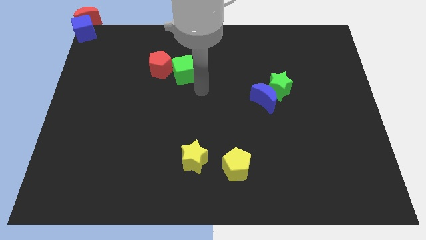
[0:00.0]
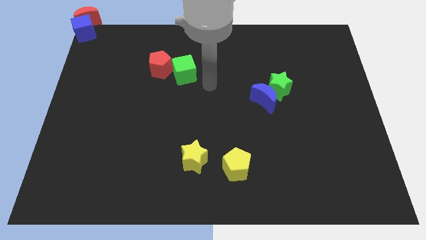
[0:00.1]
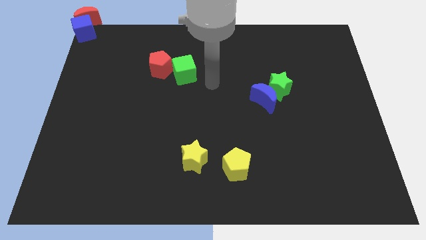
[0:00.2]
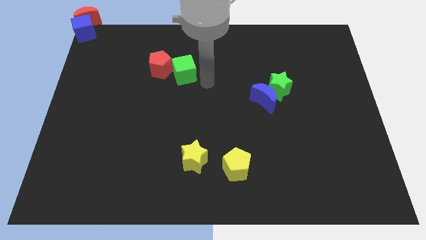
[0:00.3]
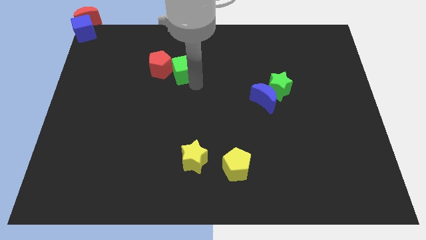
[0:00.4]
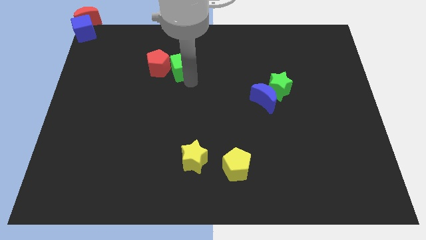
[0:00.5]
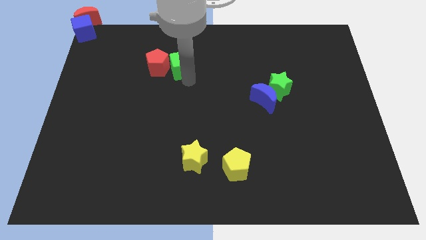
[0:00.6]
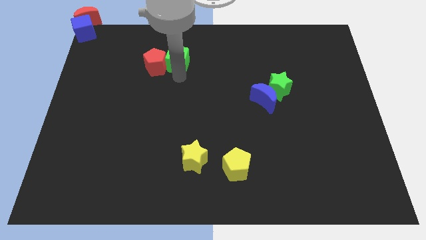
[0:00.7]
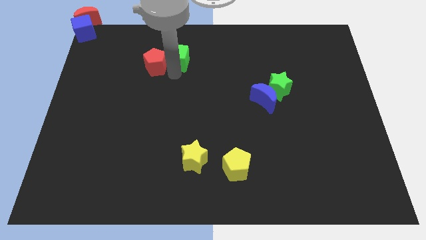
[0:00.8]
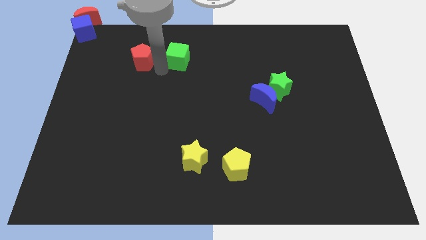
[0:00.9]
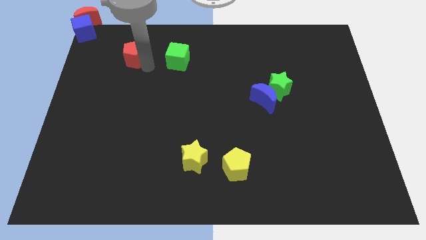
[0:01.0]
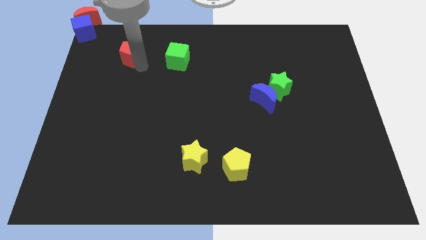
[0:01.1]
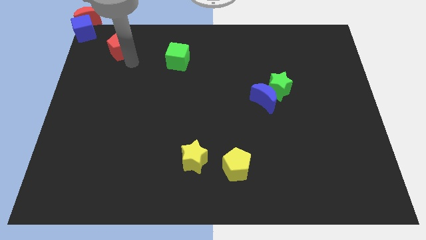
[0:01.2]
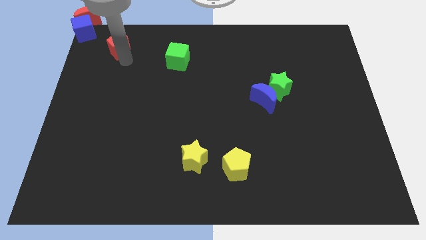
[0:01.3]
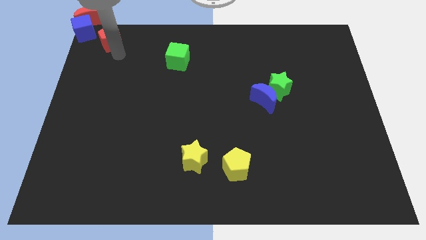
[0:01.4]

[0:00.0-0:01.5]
separate the red pentagon from the green cube

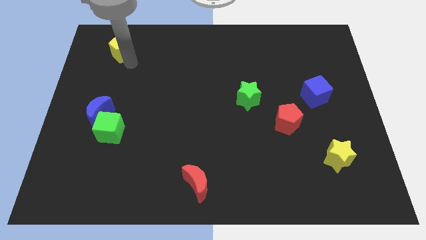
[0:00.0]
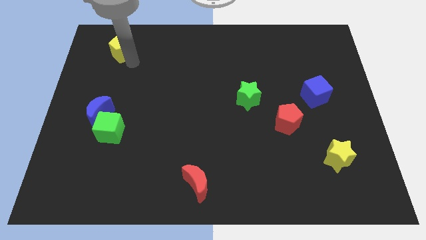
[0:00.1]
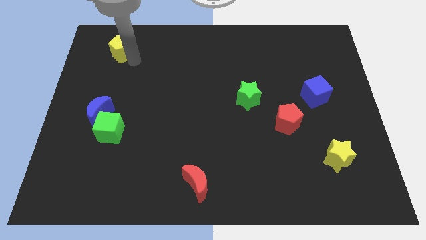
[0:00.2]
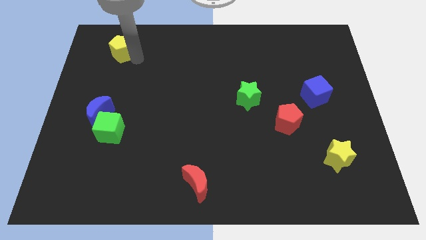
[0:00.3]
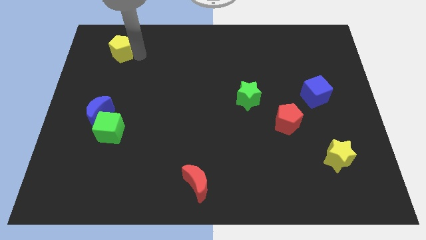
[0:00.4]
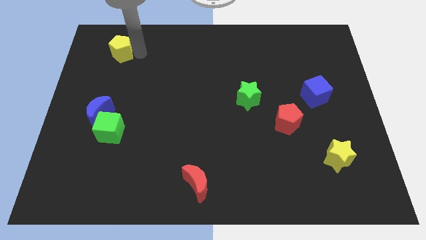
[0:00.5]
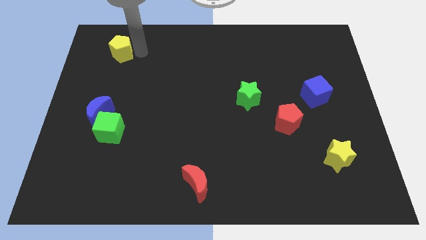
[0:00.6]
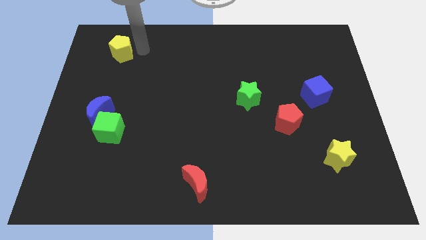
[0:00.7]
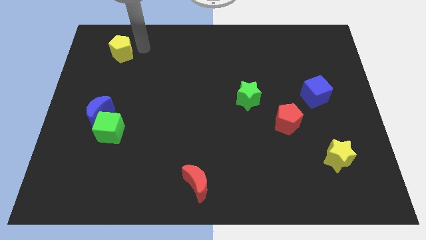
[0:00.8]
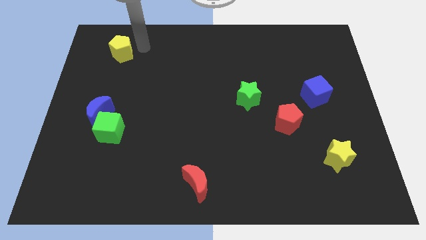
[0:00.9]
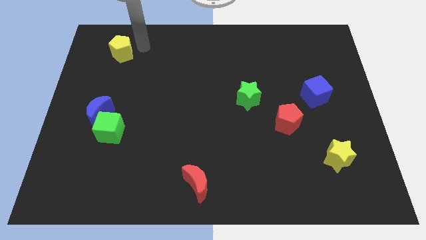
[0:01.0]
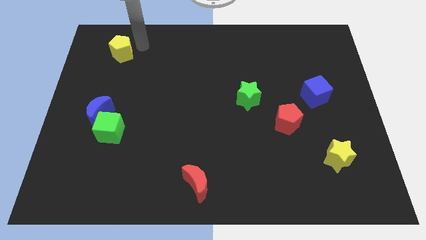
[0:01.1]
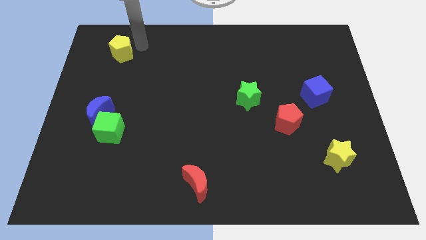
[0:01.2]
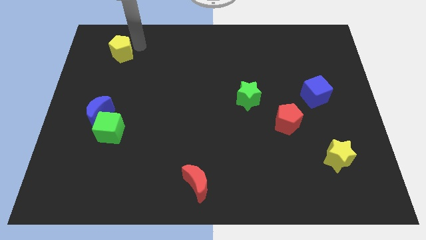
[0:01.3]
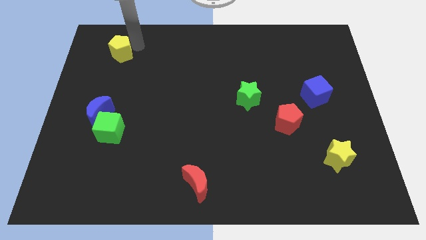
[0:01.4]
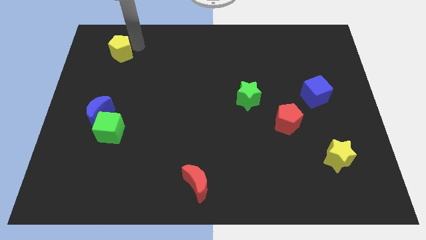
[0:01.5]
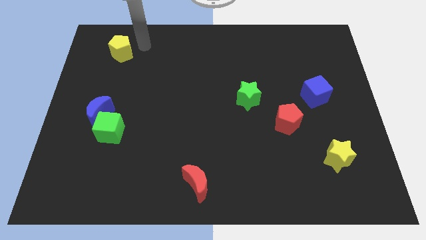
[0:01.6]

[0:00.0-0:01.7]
move the yellow pentagon to the top left side of the board

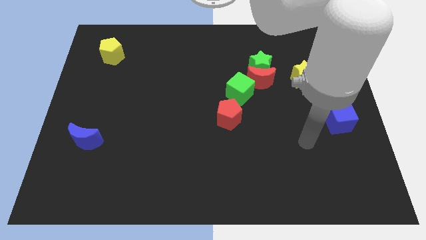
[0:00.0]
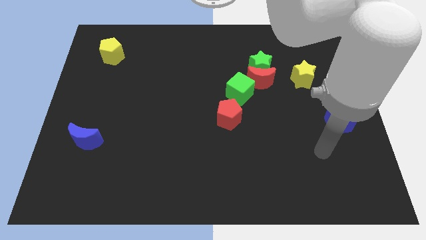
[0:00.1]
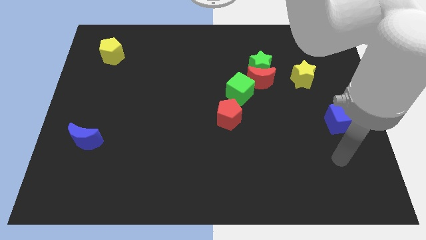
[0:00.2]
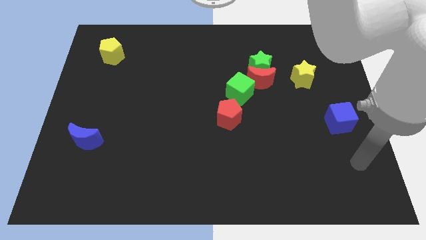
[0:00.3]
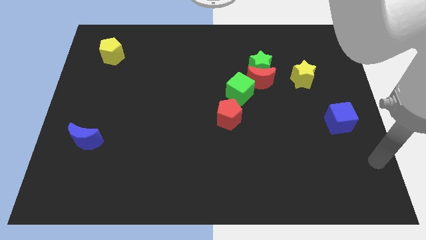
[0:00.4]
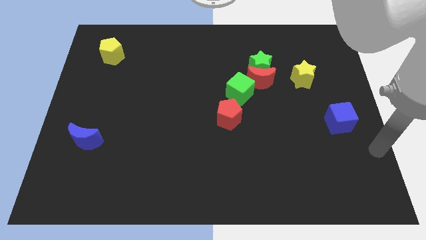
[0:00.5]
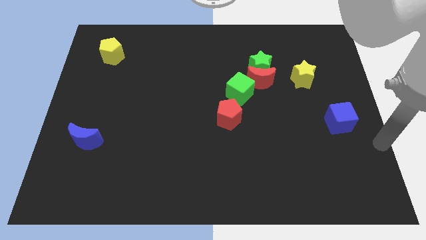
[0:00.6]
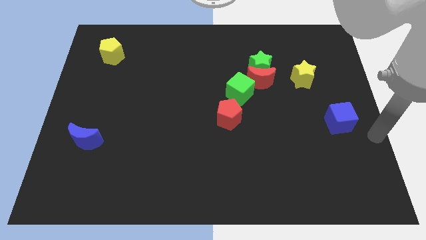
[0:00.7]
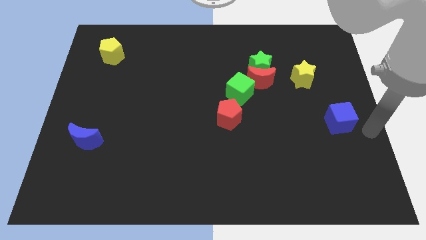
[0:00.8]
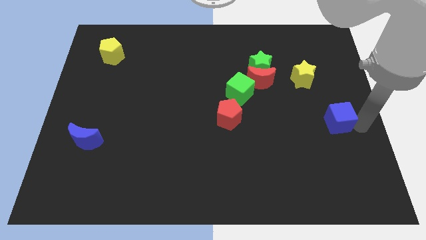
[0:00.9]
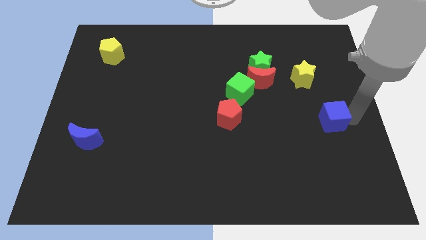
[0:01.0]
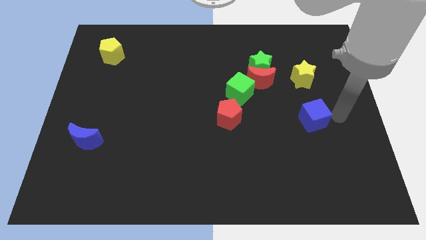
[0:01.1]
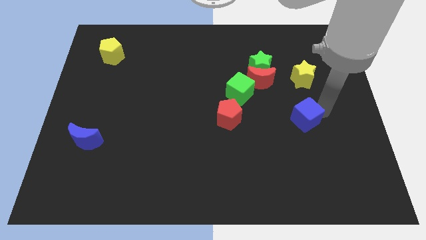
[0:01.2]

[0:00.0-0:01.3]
move blue cube towards center

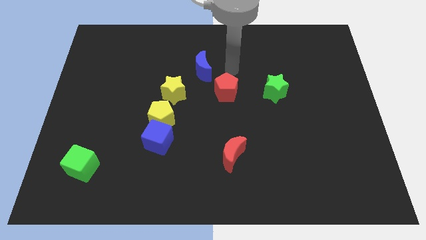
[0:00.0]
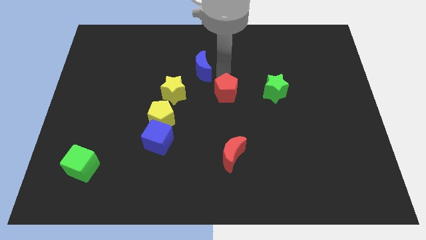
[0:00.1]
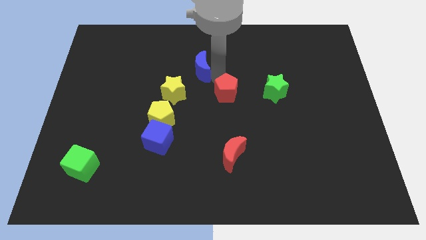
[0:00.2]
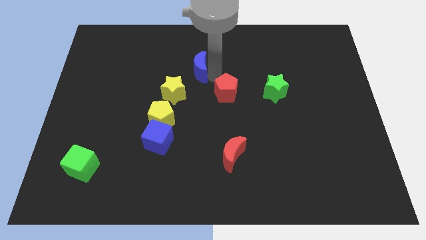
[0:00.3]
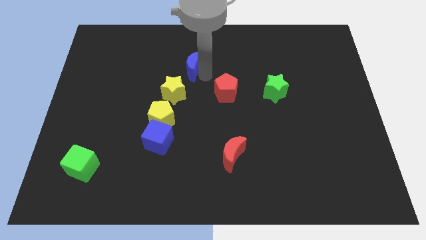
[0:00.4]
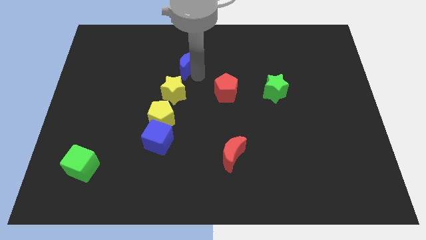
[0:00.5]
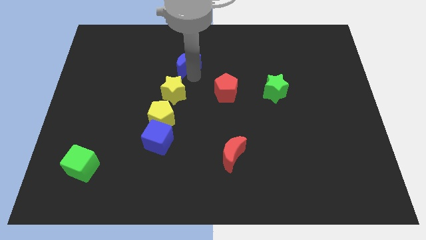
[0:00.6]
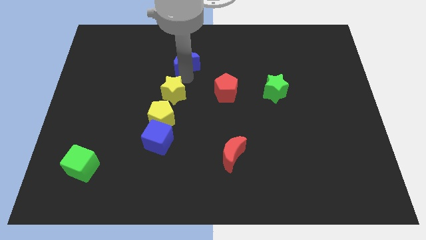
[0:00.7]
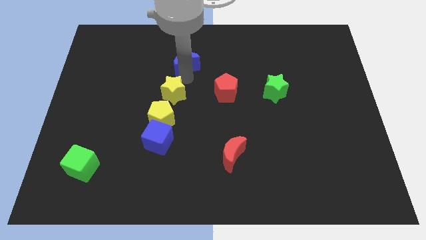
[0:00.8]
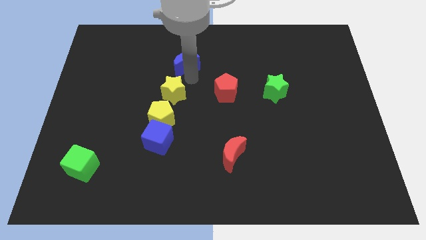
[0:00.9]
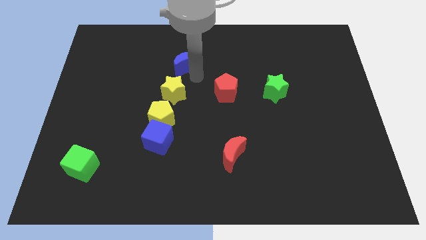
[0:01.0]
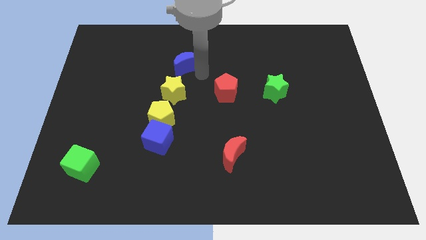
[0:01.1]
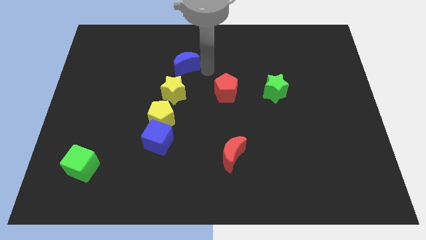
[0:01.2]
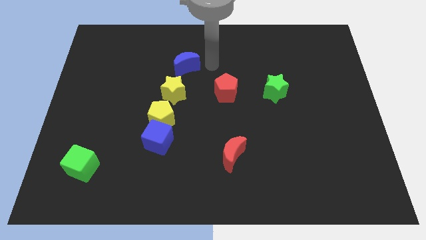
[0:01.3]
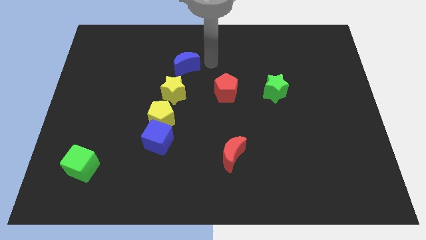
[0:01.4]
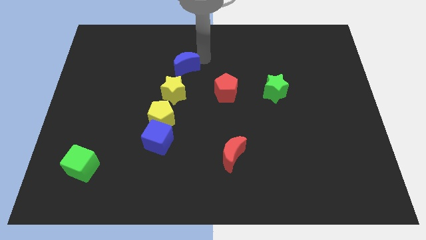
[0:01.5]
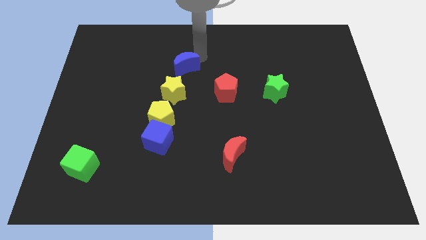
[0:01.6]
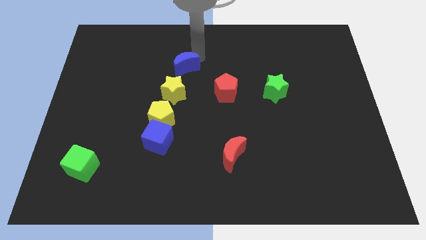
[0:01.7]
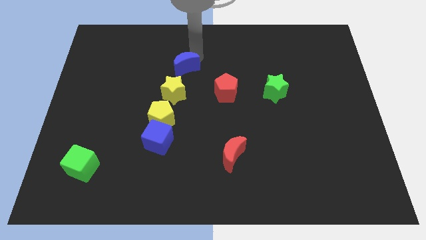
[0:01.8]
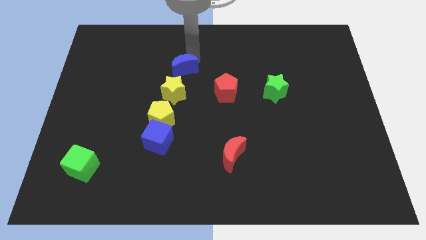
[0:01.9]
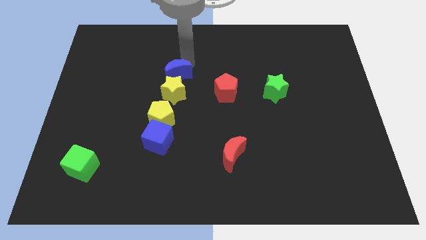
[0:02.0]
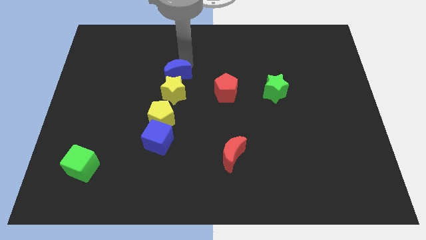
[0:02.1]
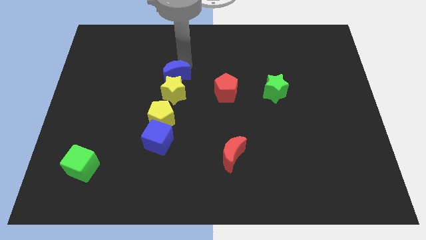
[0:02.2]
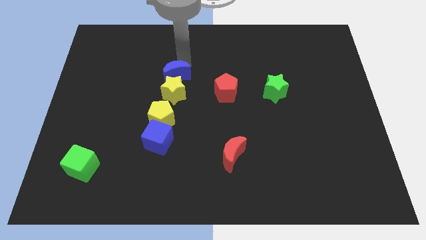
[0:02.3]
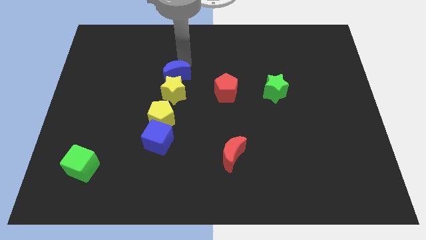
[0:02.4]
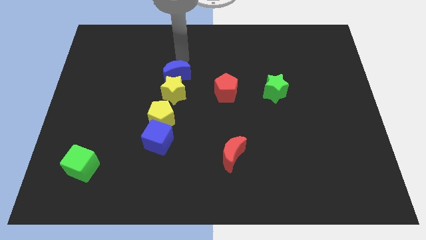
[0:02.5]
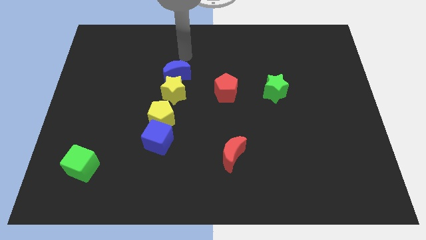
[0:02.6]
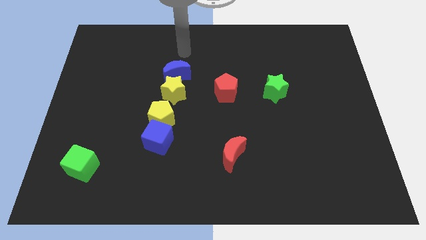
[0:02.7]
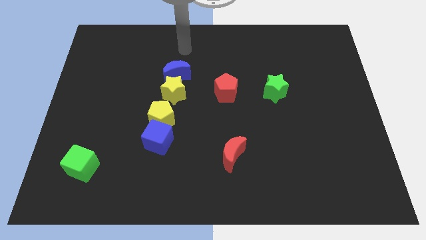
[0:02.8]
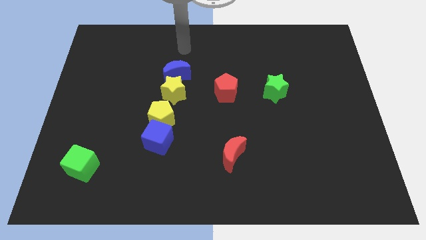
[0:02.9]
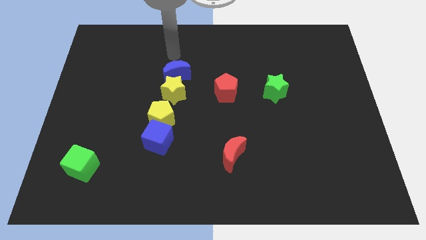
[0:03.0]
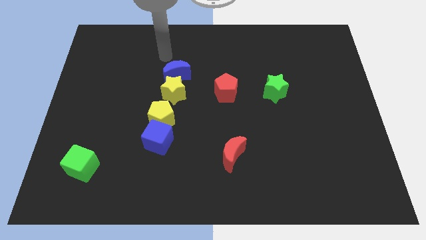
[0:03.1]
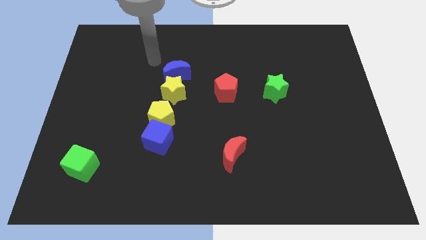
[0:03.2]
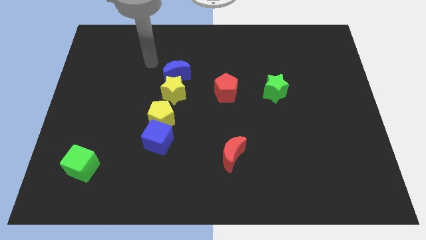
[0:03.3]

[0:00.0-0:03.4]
push blue crescent to the top of yellow star

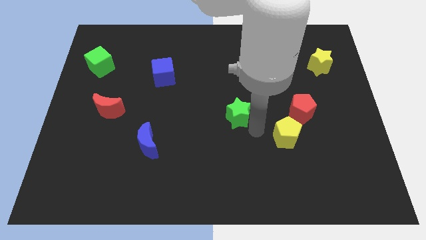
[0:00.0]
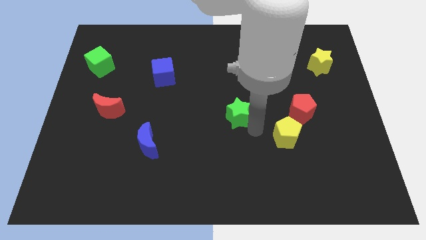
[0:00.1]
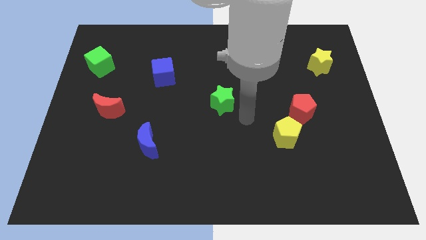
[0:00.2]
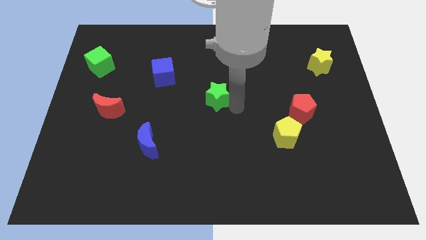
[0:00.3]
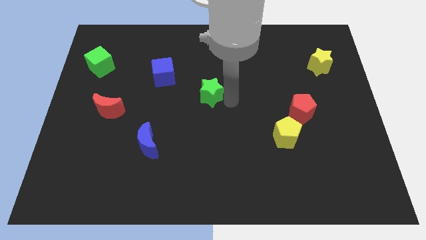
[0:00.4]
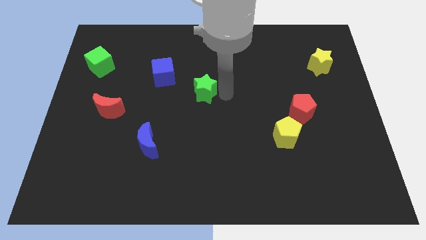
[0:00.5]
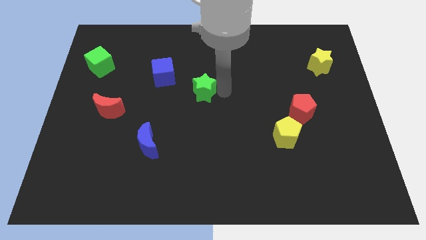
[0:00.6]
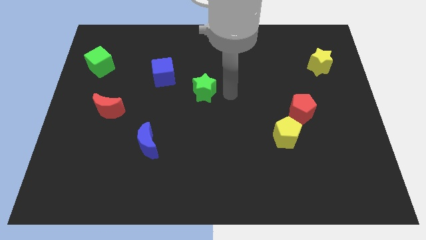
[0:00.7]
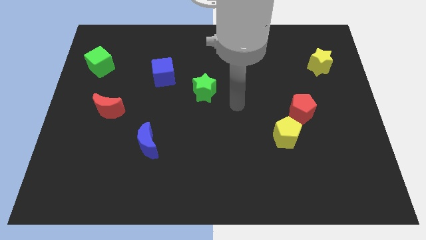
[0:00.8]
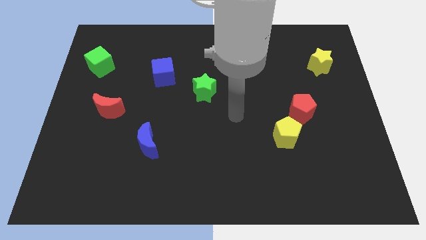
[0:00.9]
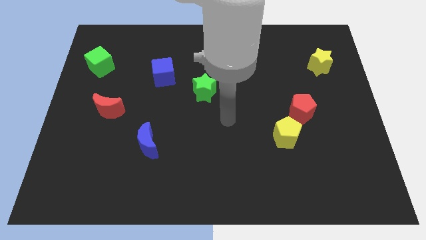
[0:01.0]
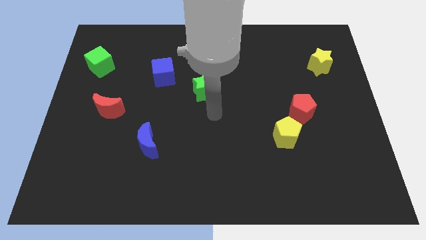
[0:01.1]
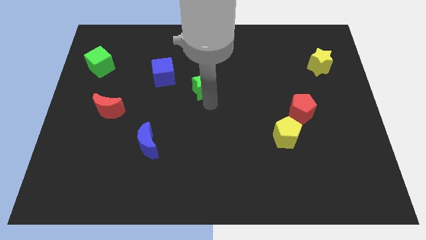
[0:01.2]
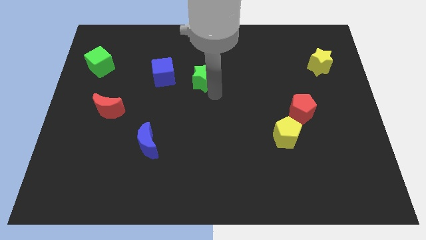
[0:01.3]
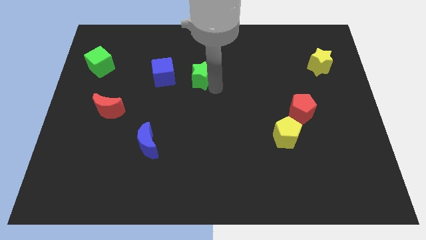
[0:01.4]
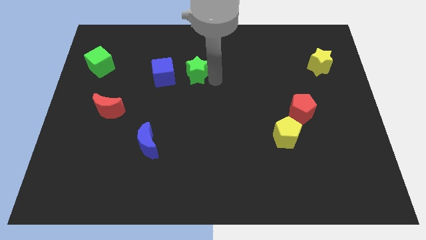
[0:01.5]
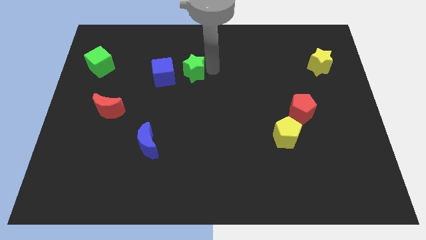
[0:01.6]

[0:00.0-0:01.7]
place the green star to the right side of the blue cube
